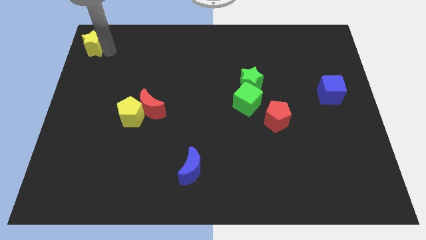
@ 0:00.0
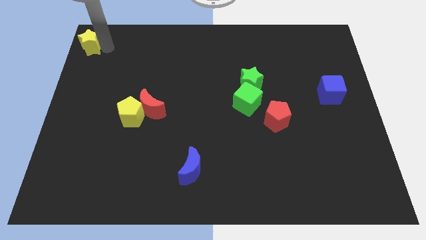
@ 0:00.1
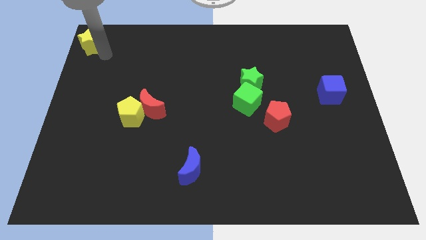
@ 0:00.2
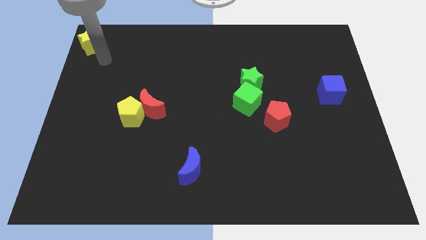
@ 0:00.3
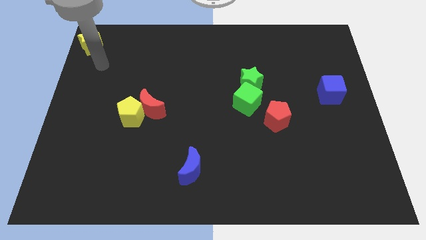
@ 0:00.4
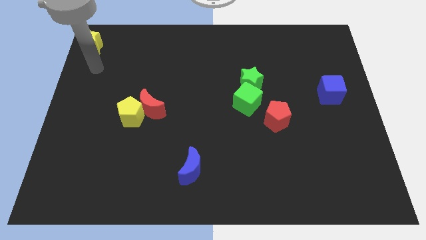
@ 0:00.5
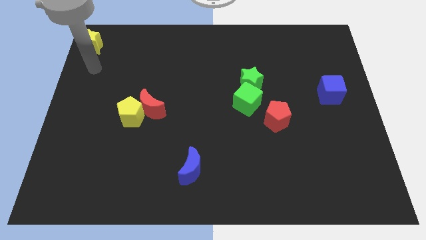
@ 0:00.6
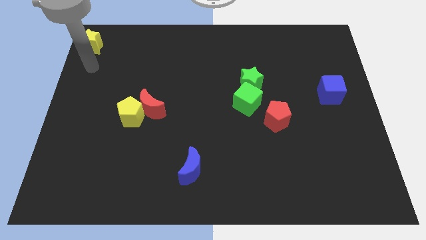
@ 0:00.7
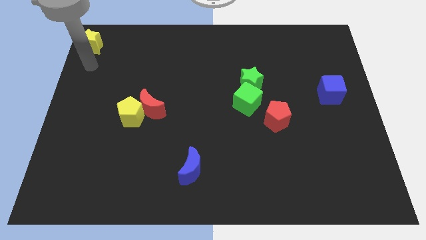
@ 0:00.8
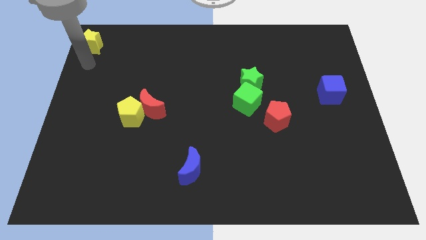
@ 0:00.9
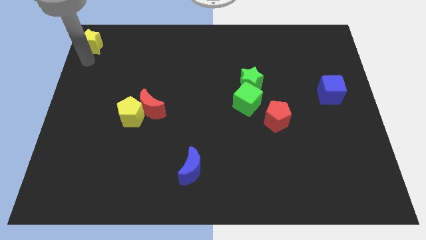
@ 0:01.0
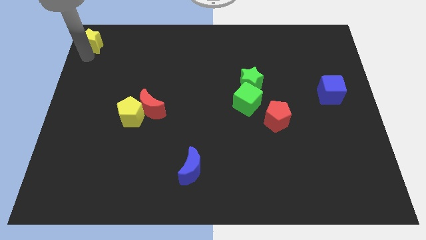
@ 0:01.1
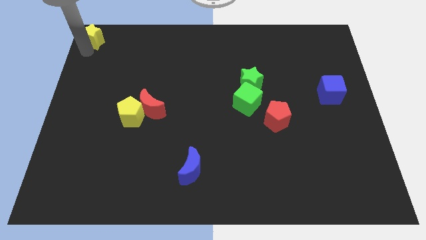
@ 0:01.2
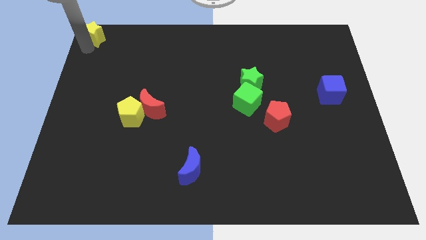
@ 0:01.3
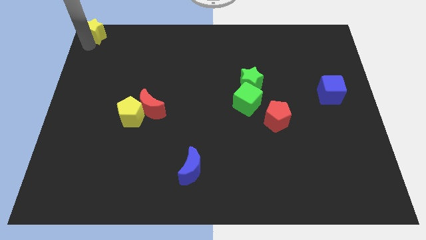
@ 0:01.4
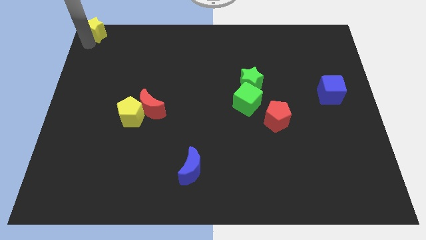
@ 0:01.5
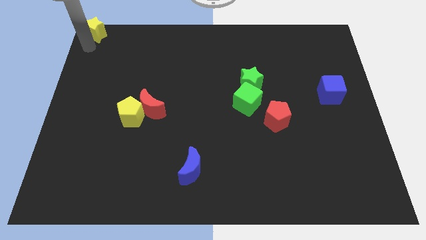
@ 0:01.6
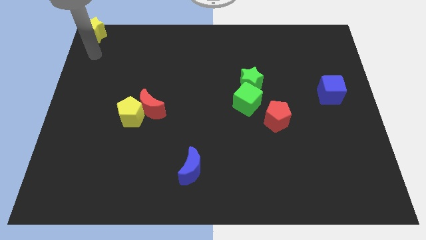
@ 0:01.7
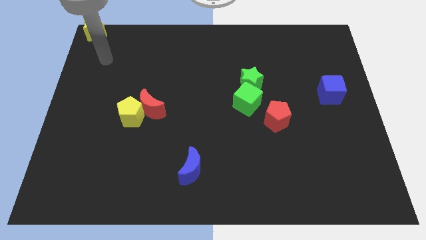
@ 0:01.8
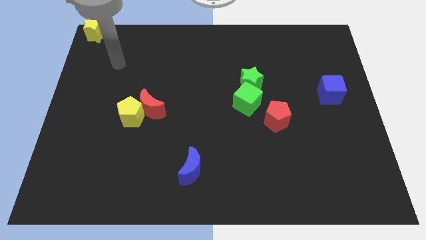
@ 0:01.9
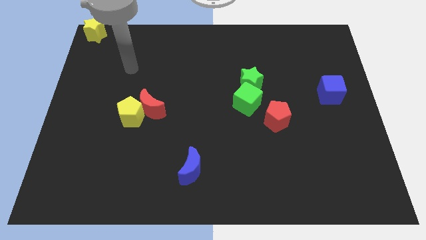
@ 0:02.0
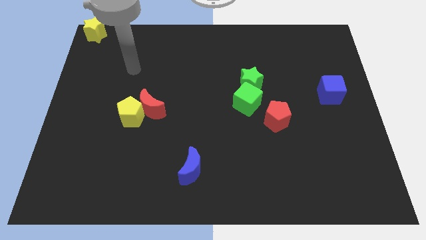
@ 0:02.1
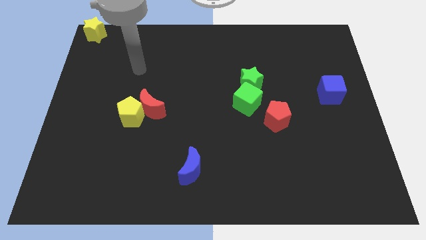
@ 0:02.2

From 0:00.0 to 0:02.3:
place the yellow star at the top left side of the board

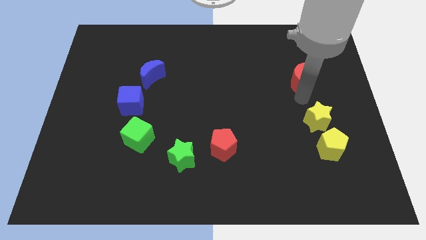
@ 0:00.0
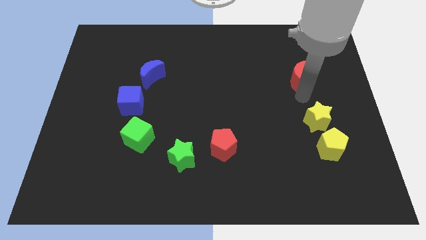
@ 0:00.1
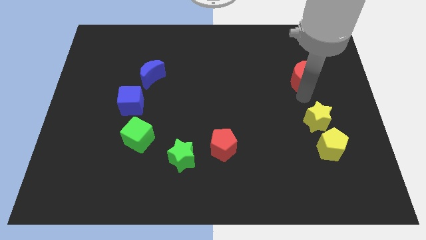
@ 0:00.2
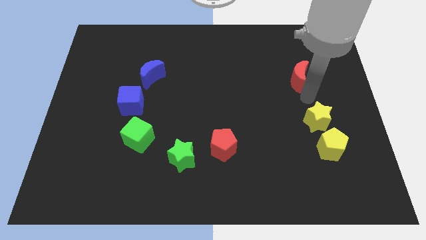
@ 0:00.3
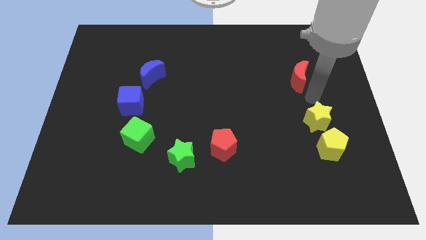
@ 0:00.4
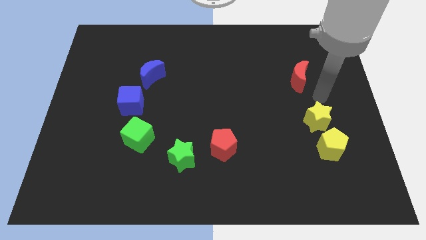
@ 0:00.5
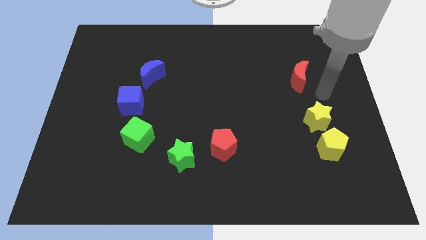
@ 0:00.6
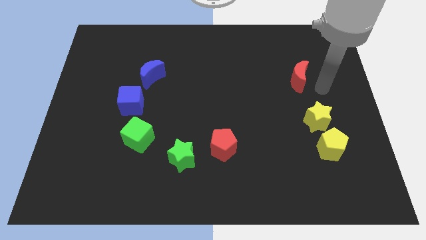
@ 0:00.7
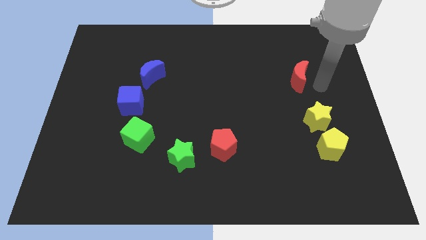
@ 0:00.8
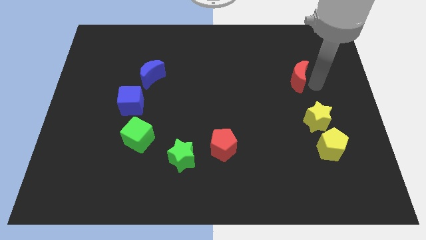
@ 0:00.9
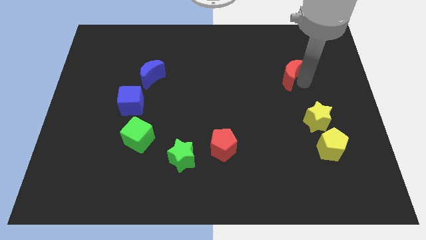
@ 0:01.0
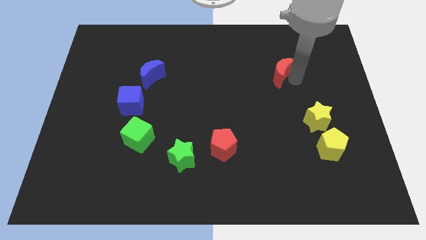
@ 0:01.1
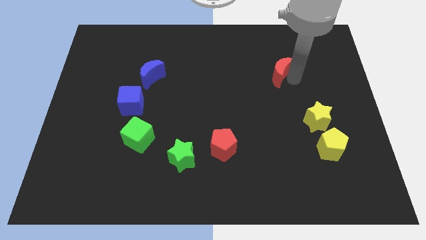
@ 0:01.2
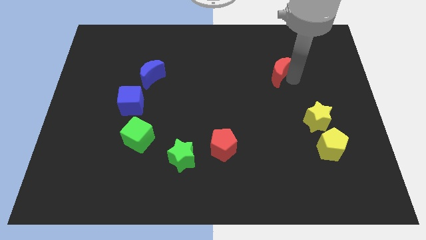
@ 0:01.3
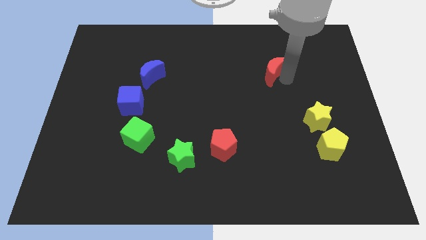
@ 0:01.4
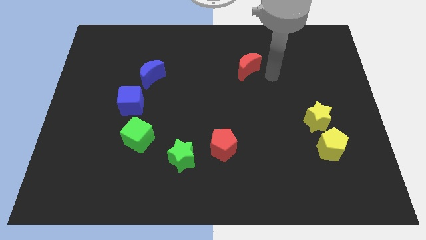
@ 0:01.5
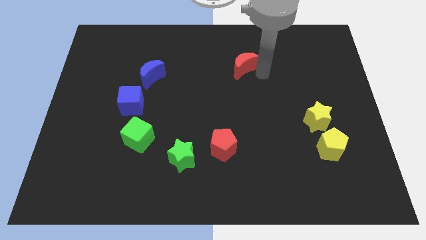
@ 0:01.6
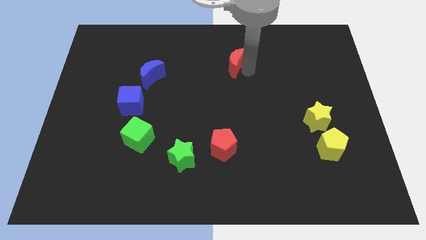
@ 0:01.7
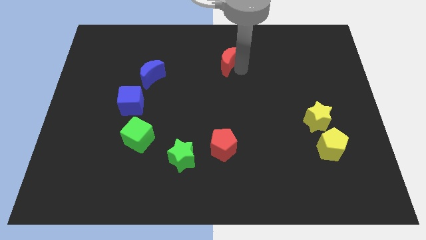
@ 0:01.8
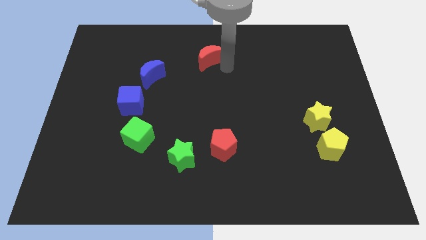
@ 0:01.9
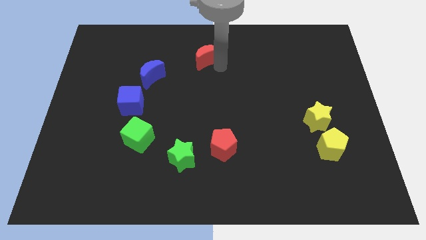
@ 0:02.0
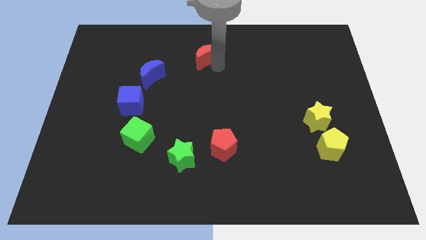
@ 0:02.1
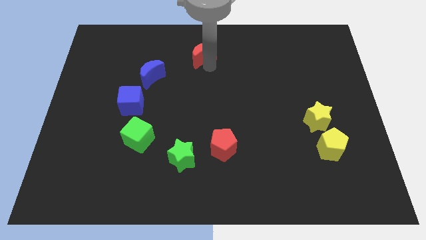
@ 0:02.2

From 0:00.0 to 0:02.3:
move the red crescent towards the top left of board

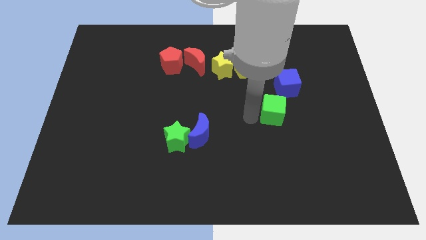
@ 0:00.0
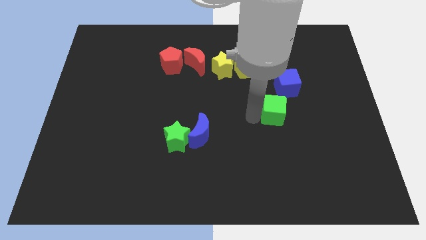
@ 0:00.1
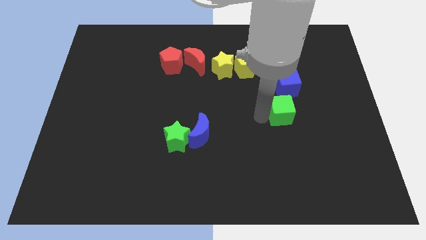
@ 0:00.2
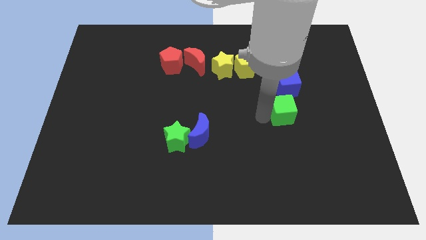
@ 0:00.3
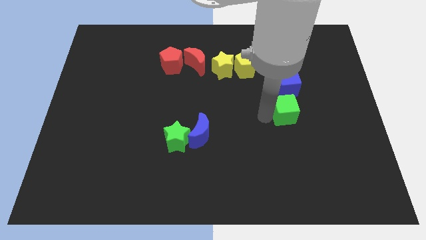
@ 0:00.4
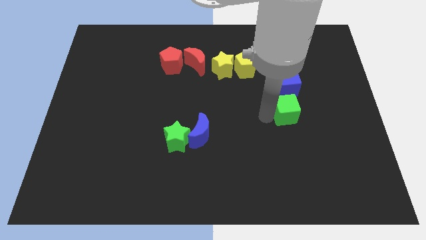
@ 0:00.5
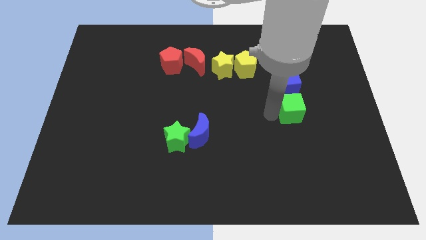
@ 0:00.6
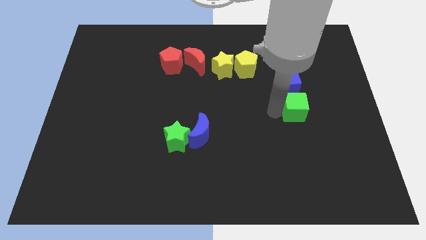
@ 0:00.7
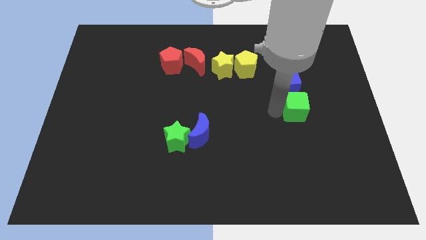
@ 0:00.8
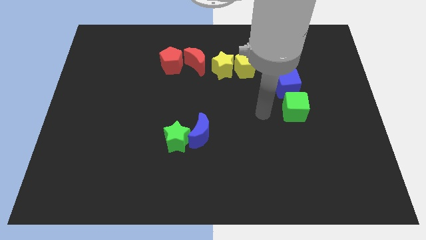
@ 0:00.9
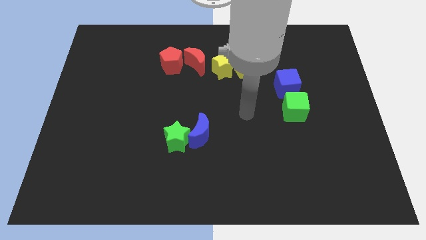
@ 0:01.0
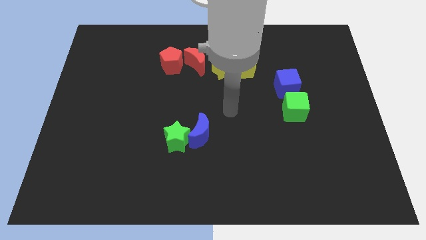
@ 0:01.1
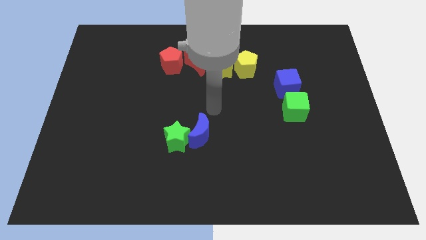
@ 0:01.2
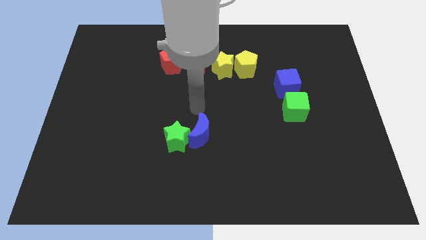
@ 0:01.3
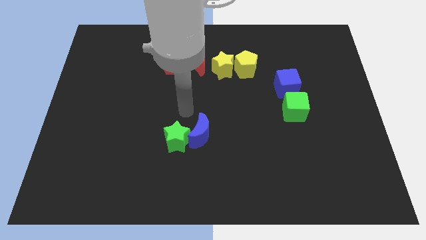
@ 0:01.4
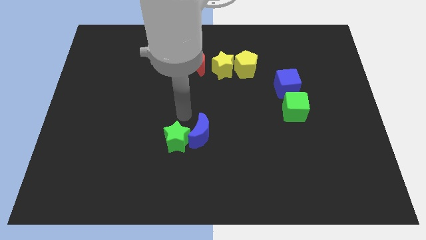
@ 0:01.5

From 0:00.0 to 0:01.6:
place the green cube to the bottom of the blue cube

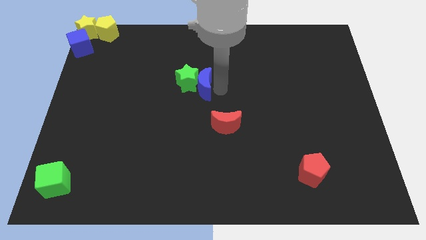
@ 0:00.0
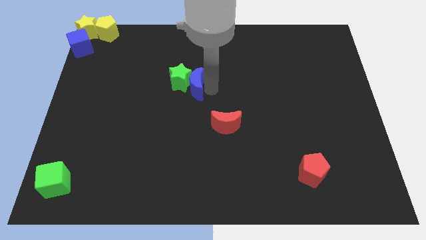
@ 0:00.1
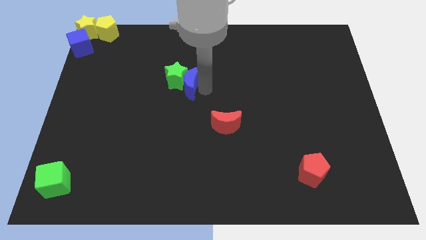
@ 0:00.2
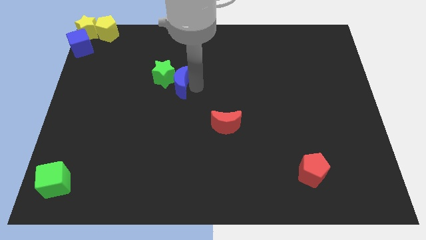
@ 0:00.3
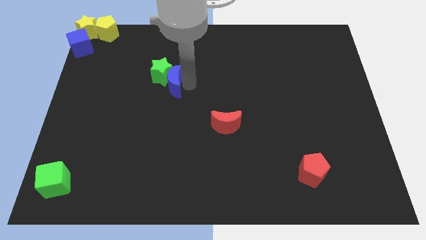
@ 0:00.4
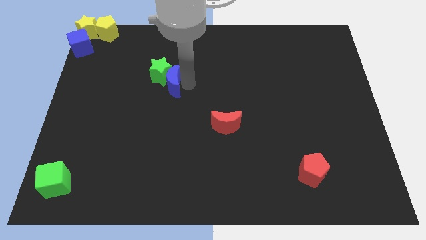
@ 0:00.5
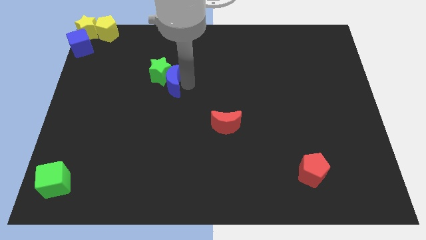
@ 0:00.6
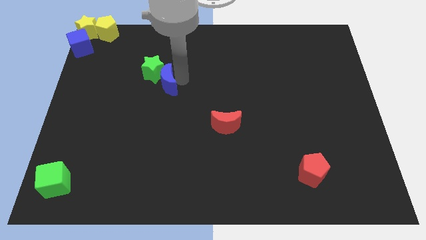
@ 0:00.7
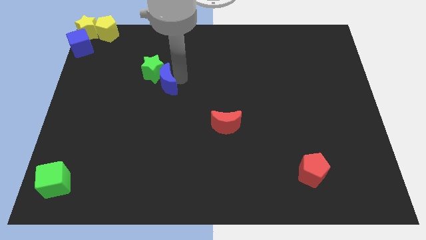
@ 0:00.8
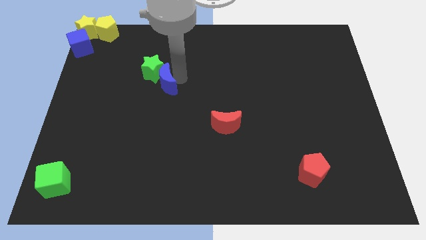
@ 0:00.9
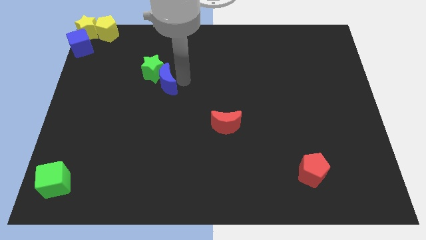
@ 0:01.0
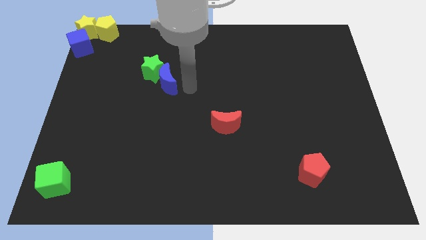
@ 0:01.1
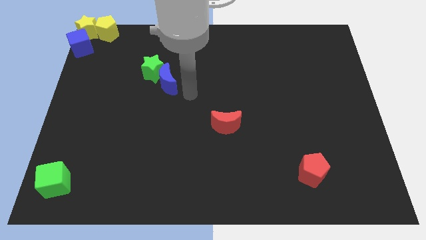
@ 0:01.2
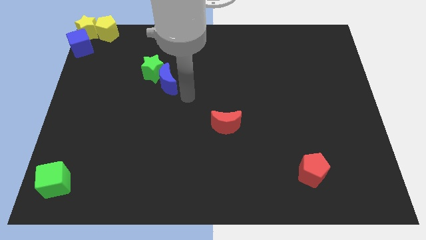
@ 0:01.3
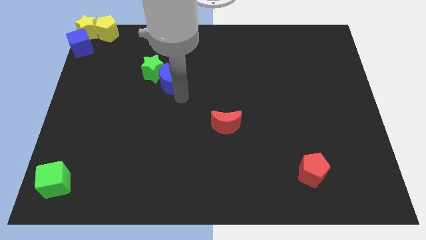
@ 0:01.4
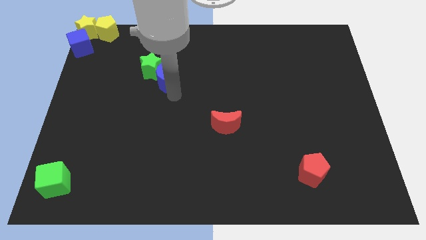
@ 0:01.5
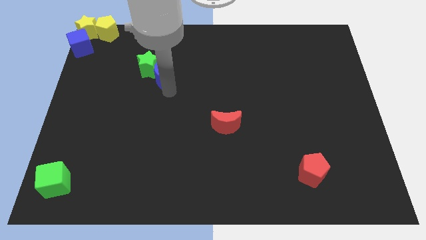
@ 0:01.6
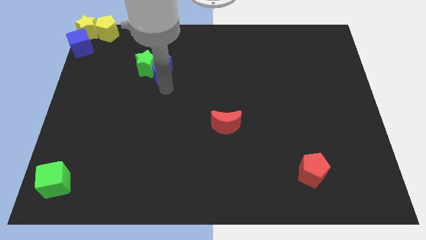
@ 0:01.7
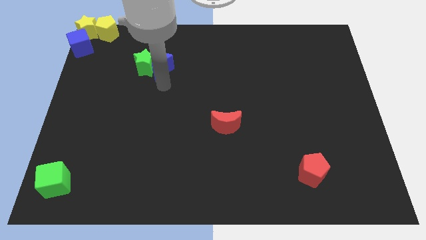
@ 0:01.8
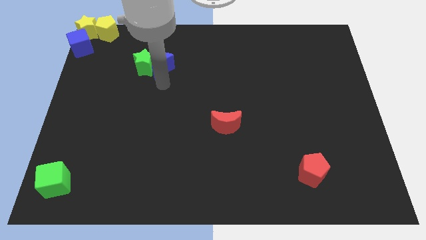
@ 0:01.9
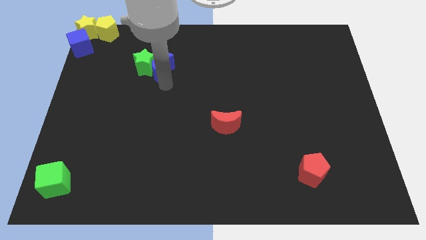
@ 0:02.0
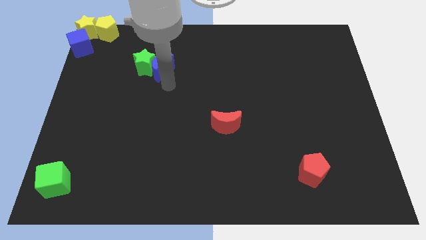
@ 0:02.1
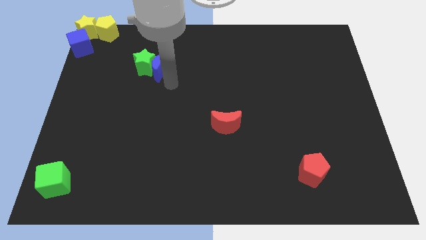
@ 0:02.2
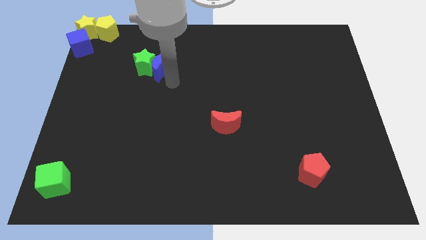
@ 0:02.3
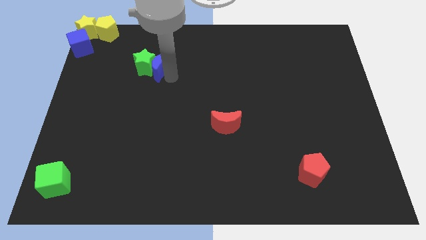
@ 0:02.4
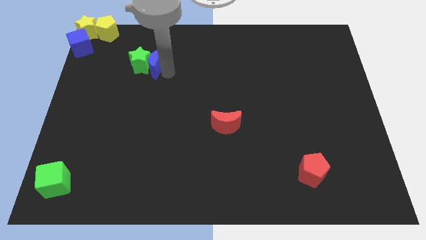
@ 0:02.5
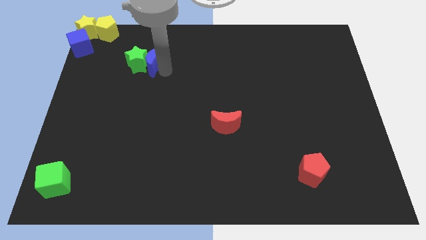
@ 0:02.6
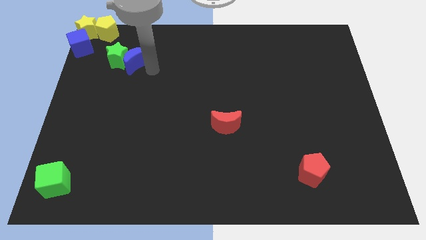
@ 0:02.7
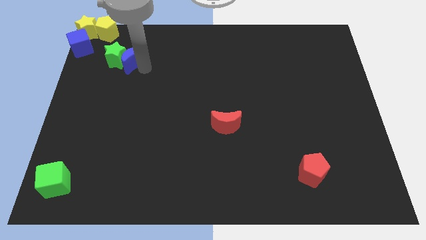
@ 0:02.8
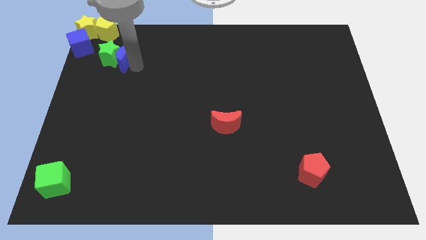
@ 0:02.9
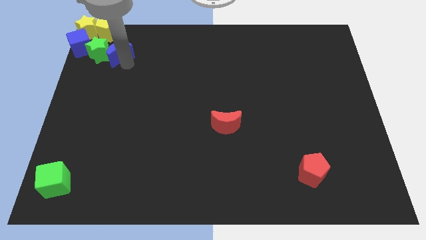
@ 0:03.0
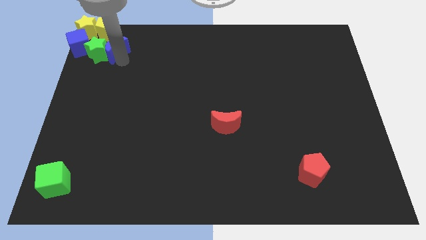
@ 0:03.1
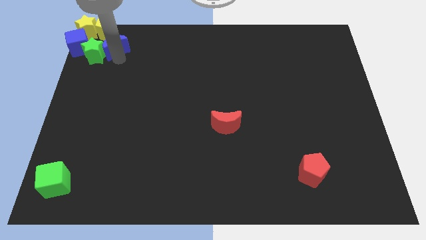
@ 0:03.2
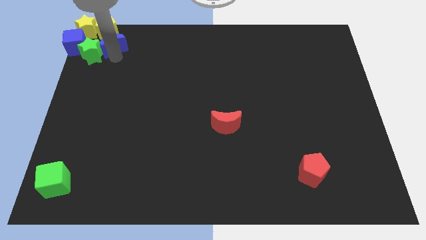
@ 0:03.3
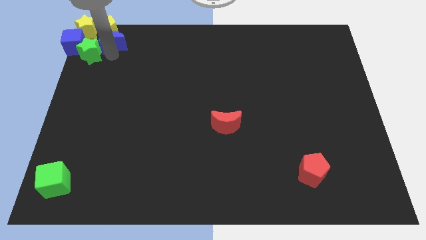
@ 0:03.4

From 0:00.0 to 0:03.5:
push the green star and the blue moon into the group of both the yellow blocks and the blue cube
